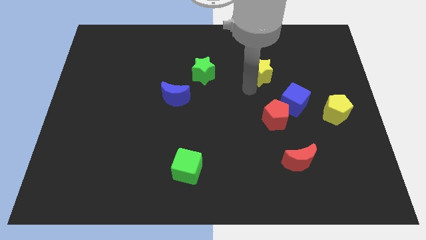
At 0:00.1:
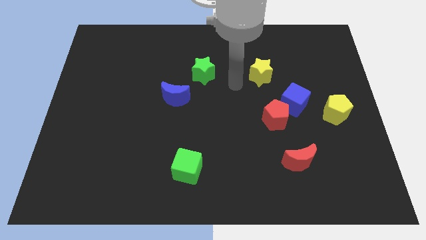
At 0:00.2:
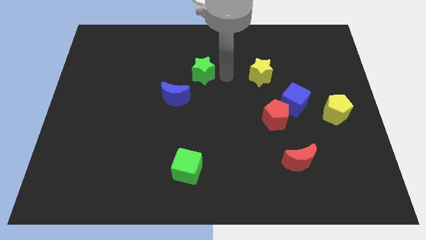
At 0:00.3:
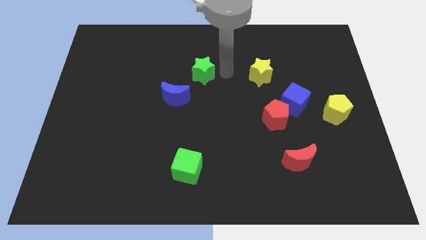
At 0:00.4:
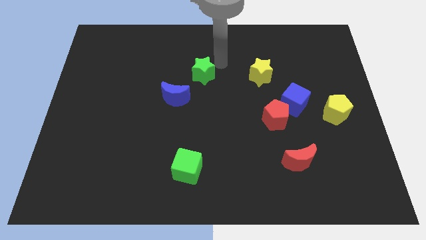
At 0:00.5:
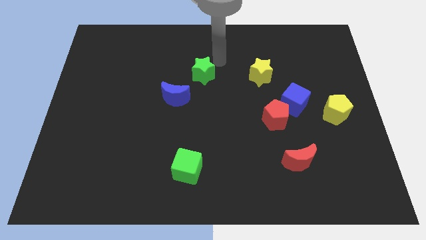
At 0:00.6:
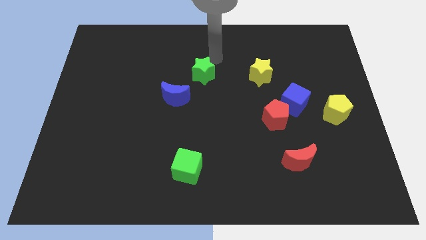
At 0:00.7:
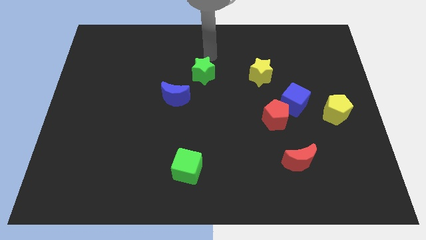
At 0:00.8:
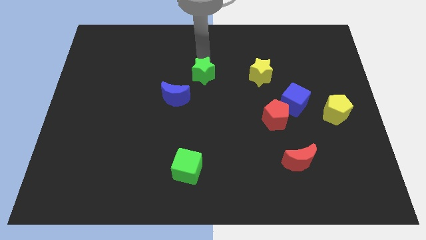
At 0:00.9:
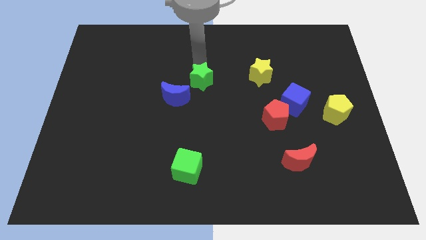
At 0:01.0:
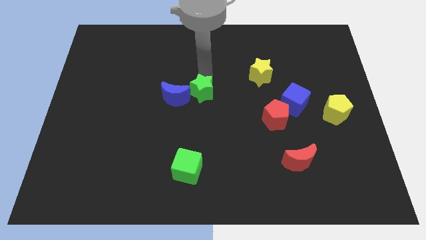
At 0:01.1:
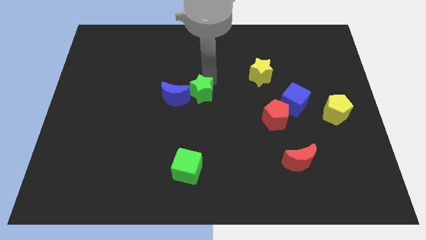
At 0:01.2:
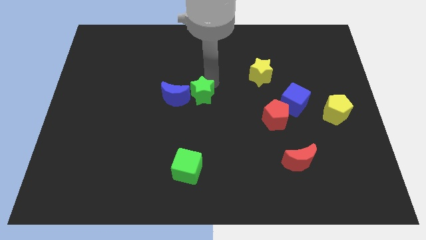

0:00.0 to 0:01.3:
move the green star to the right of the blue crescent

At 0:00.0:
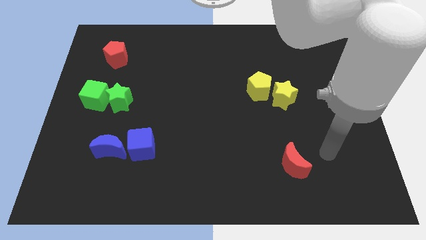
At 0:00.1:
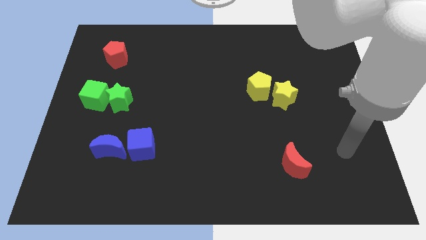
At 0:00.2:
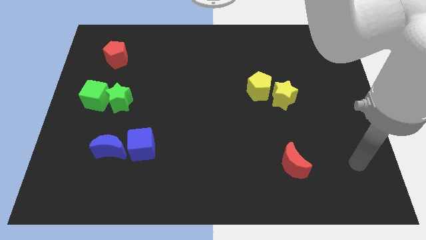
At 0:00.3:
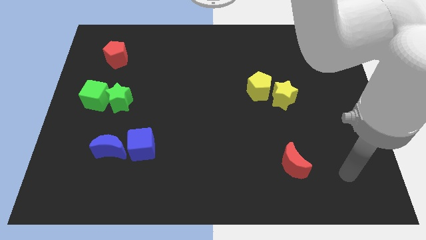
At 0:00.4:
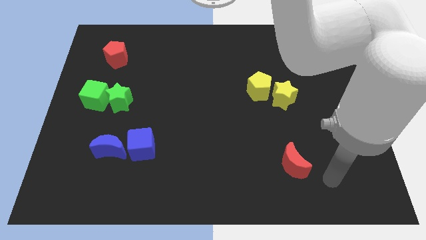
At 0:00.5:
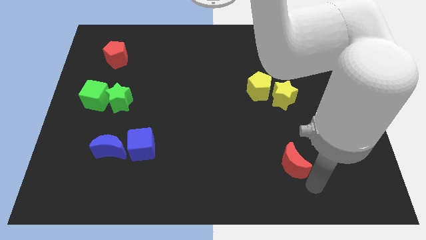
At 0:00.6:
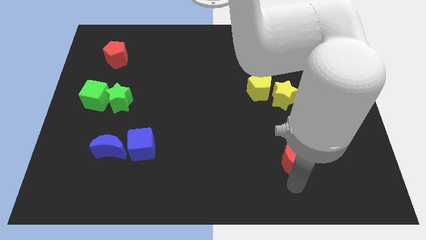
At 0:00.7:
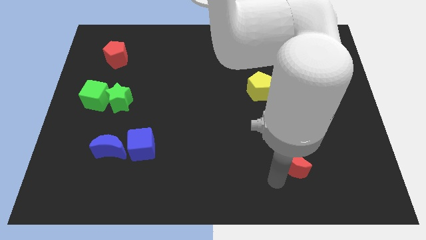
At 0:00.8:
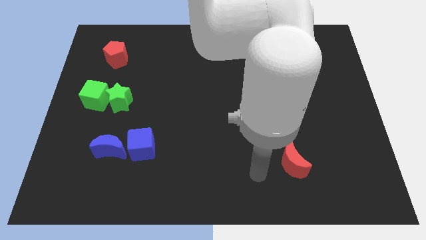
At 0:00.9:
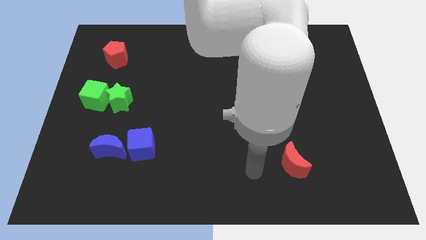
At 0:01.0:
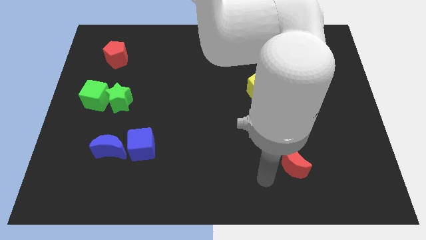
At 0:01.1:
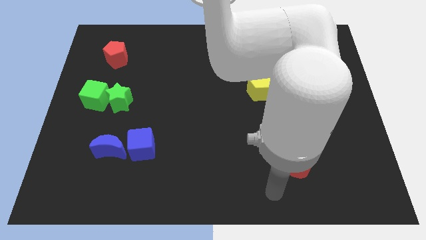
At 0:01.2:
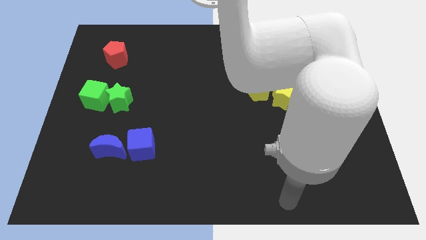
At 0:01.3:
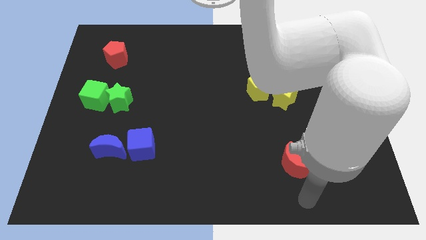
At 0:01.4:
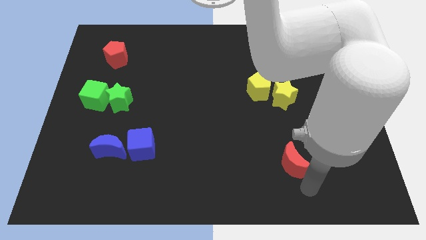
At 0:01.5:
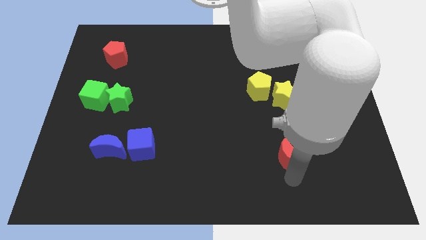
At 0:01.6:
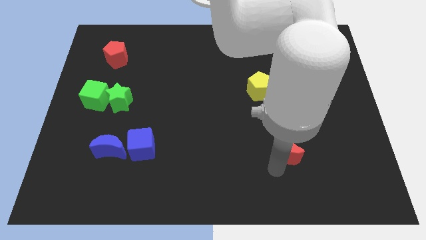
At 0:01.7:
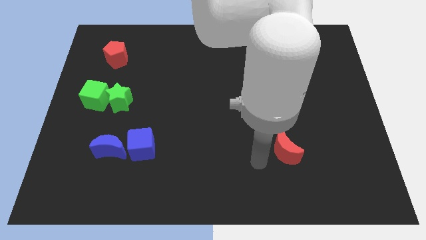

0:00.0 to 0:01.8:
slightly move the red moon up

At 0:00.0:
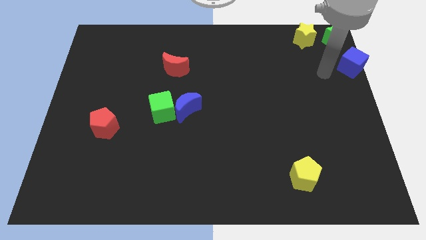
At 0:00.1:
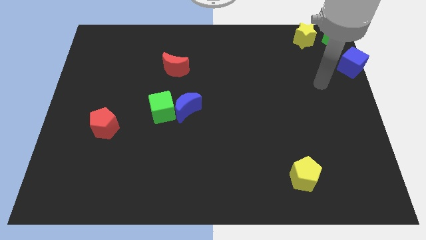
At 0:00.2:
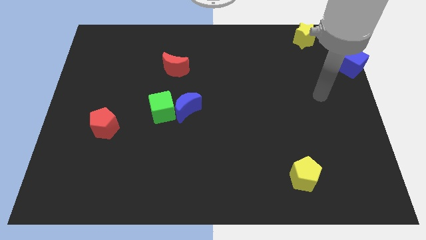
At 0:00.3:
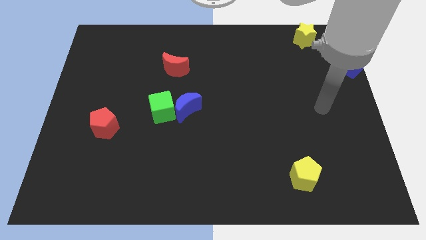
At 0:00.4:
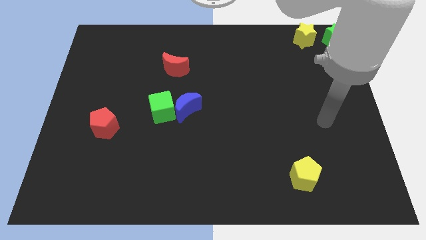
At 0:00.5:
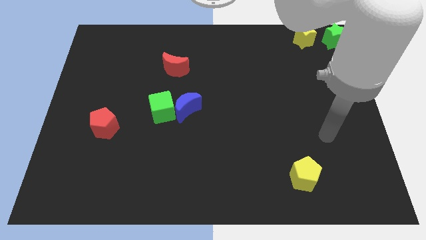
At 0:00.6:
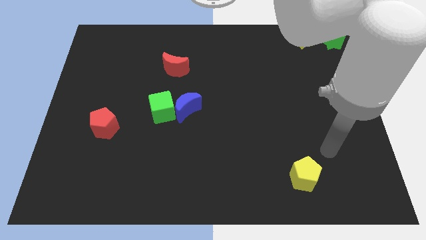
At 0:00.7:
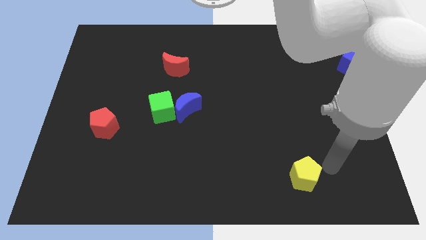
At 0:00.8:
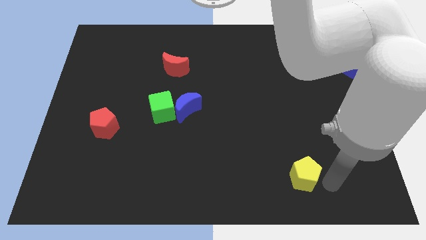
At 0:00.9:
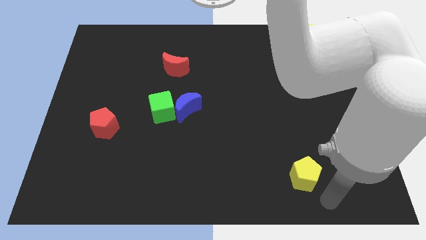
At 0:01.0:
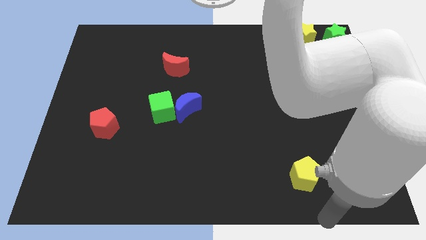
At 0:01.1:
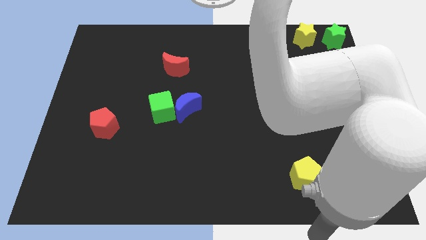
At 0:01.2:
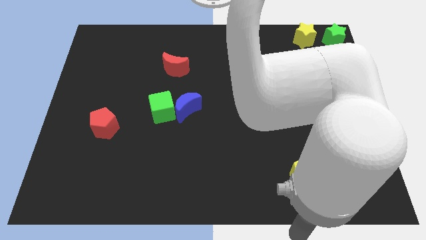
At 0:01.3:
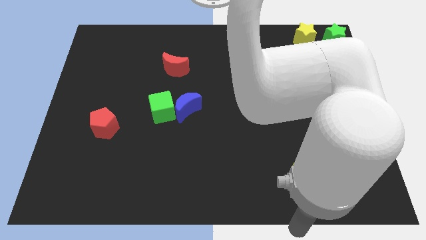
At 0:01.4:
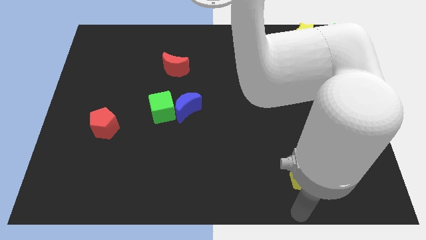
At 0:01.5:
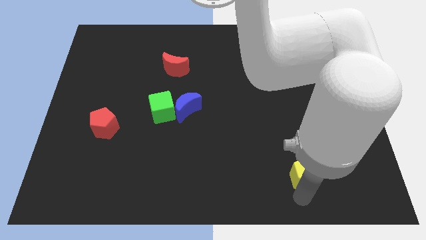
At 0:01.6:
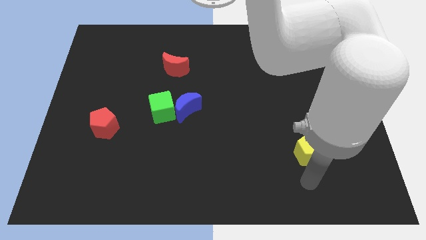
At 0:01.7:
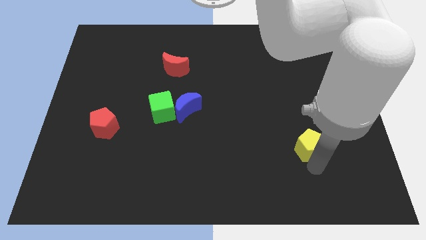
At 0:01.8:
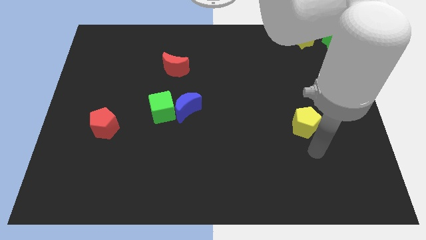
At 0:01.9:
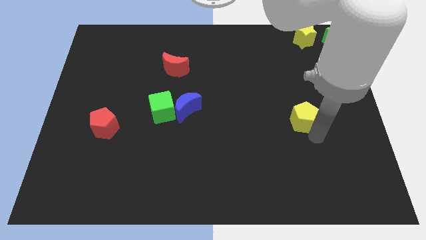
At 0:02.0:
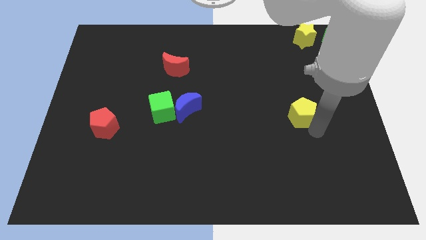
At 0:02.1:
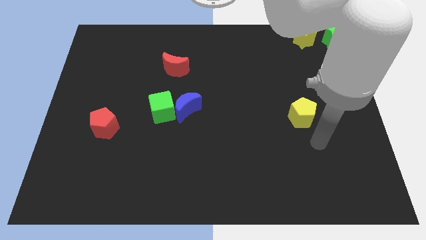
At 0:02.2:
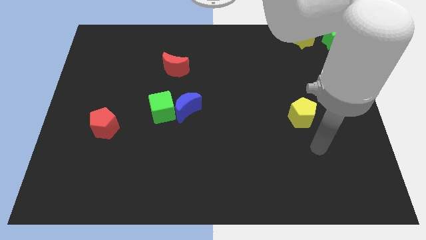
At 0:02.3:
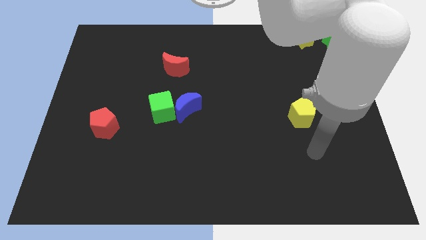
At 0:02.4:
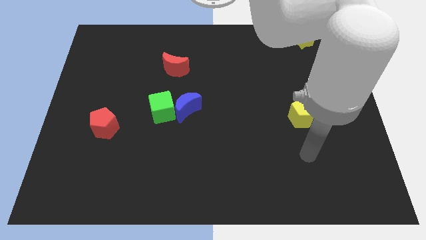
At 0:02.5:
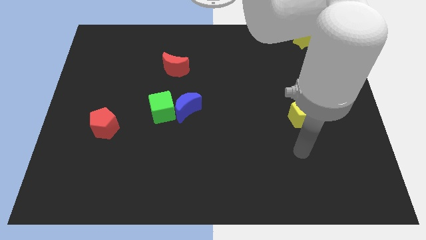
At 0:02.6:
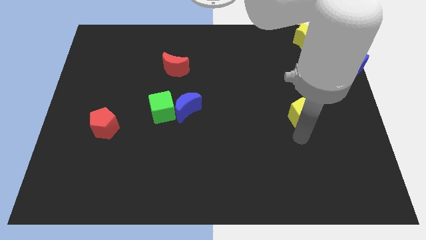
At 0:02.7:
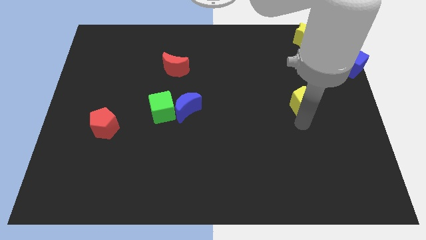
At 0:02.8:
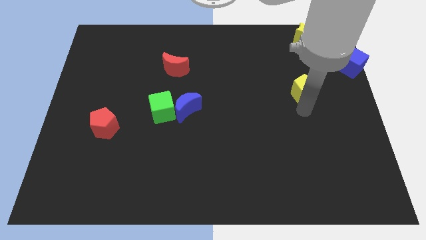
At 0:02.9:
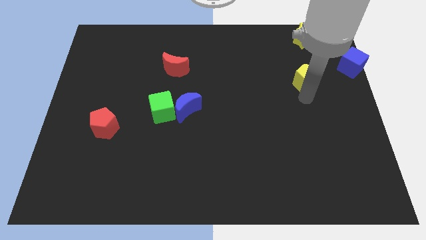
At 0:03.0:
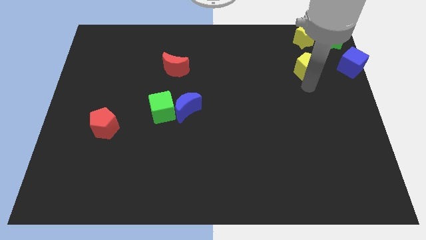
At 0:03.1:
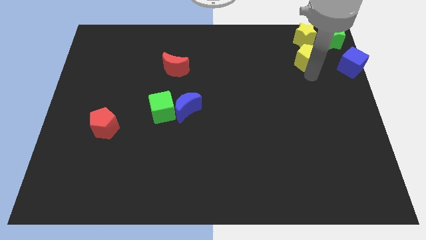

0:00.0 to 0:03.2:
push the yellow pentagon to the top of the board

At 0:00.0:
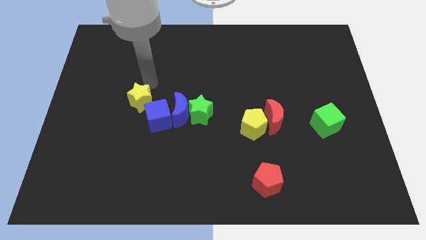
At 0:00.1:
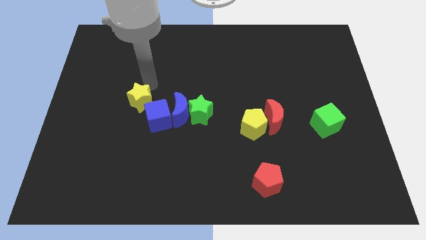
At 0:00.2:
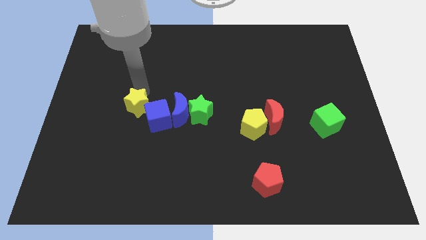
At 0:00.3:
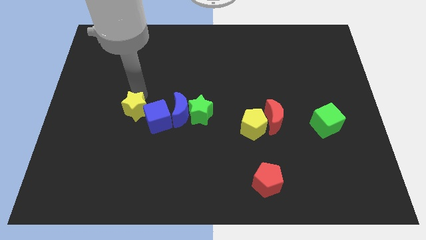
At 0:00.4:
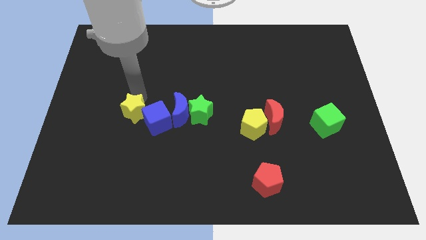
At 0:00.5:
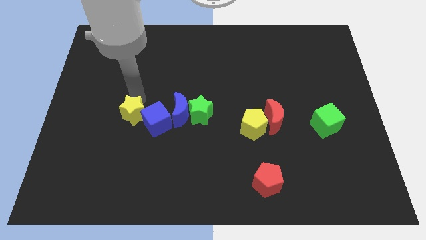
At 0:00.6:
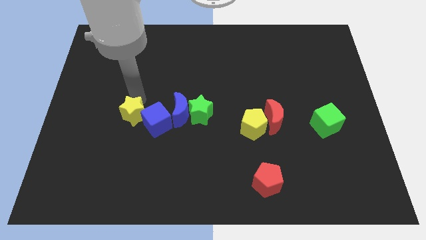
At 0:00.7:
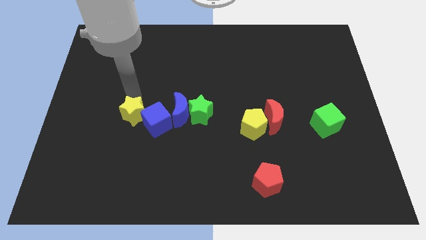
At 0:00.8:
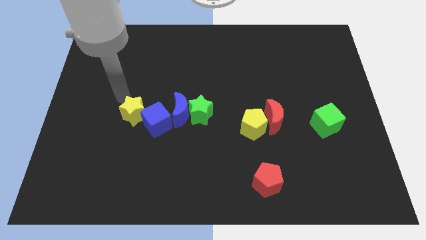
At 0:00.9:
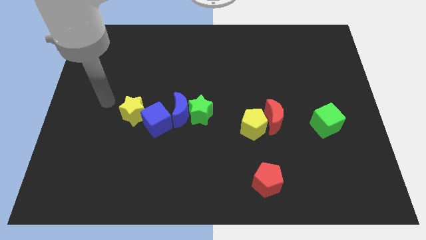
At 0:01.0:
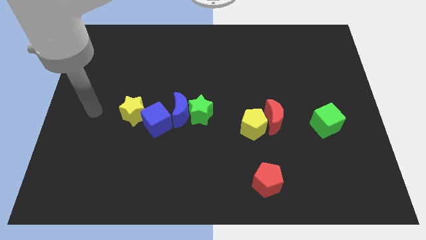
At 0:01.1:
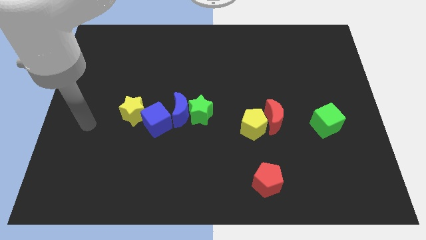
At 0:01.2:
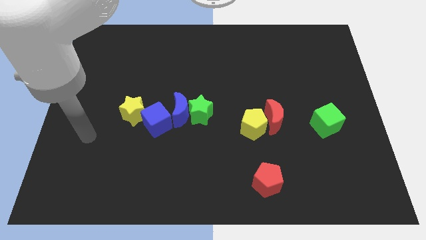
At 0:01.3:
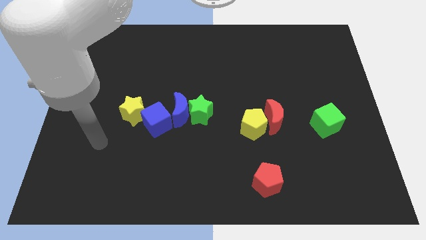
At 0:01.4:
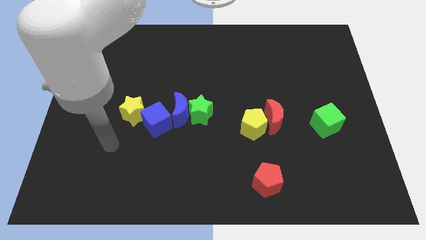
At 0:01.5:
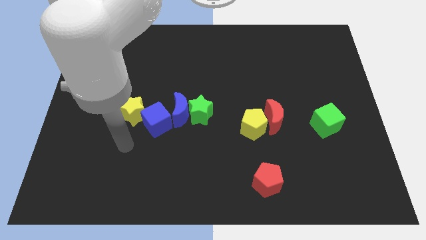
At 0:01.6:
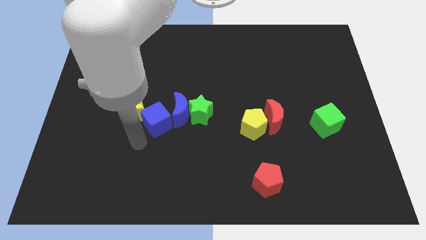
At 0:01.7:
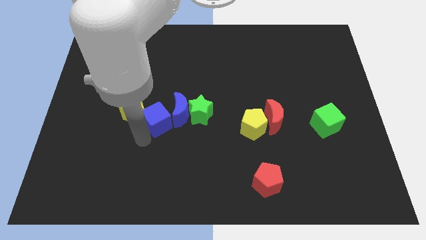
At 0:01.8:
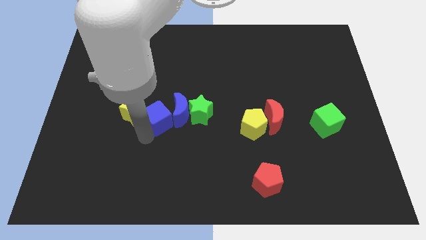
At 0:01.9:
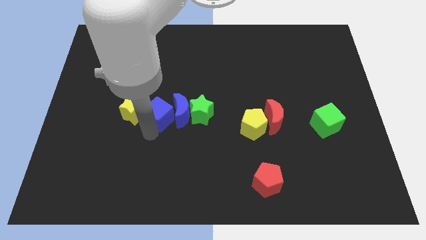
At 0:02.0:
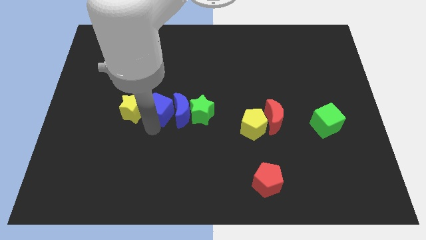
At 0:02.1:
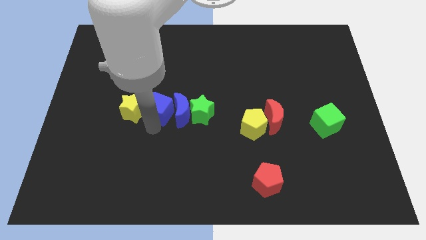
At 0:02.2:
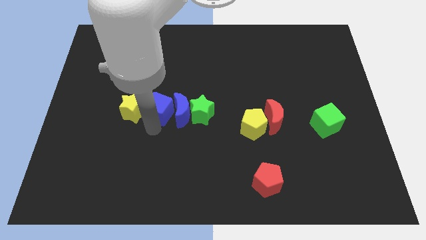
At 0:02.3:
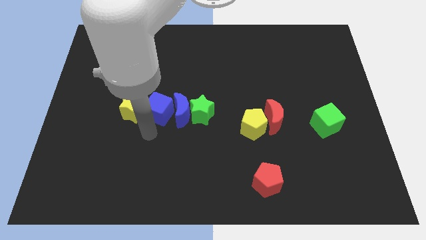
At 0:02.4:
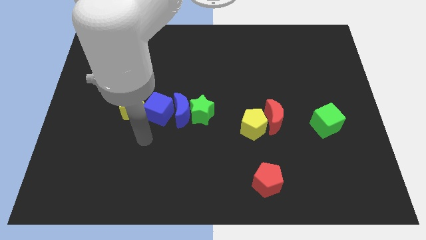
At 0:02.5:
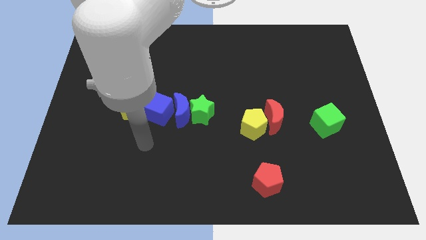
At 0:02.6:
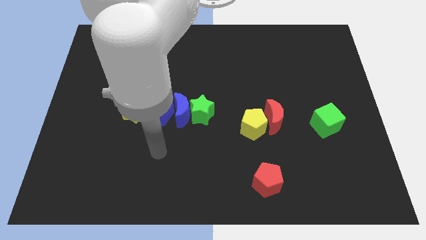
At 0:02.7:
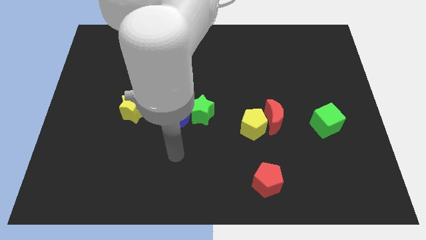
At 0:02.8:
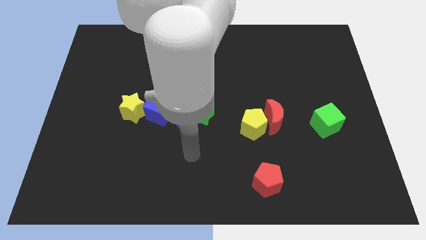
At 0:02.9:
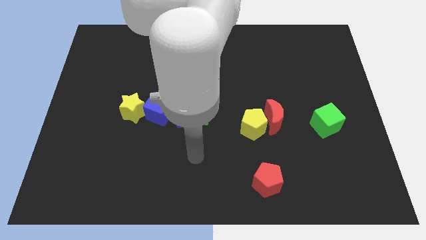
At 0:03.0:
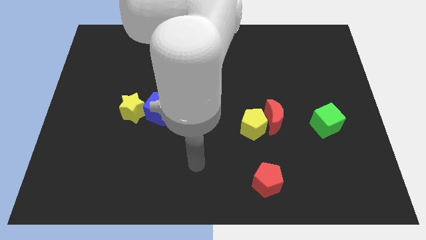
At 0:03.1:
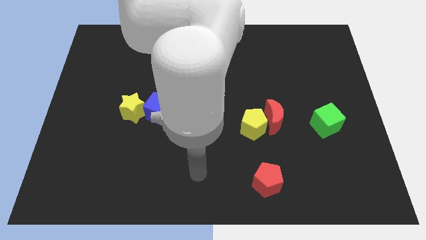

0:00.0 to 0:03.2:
make a horizontal line with the blue blocks and yellow star and green star
